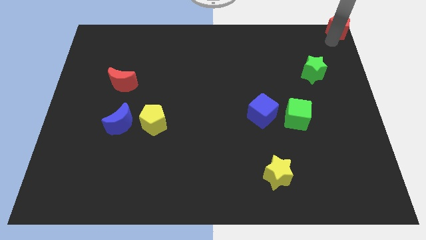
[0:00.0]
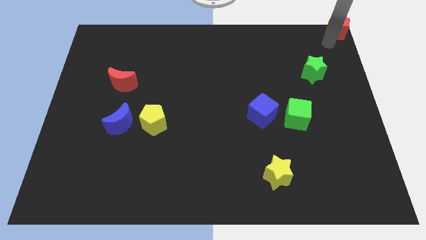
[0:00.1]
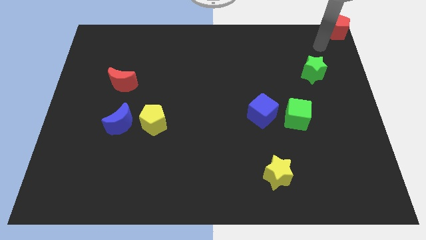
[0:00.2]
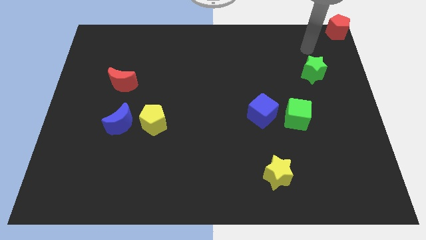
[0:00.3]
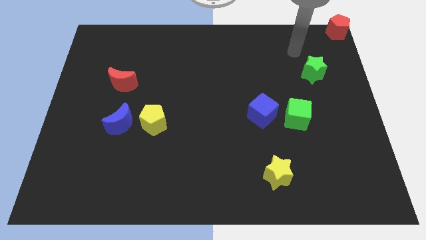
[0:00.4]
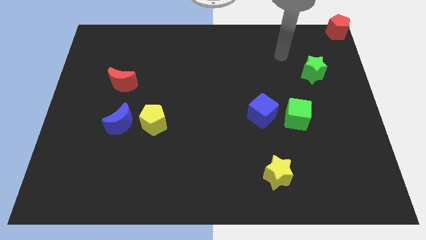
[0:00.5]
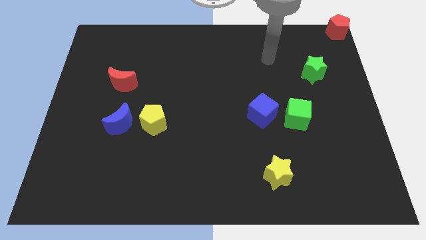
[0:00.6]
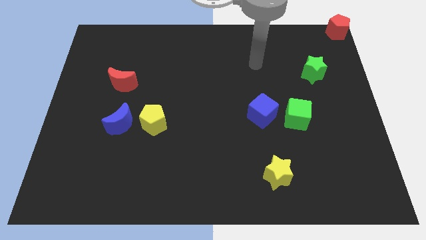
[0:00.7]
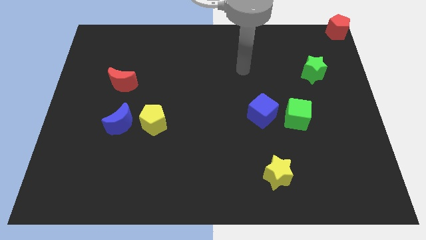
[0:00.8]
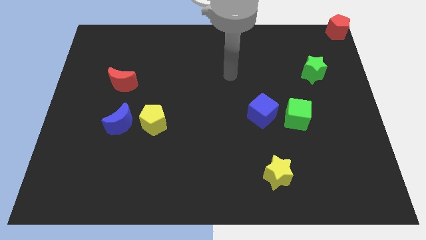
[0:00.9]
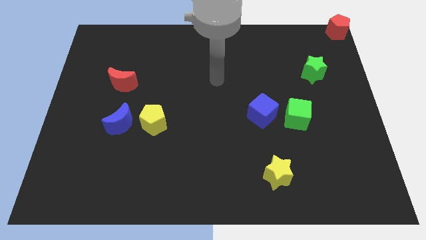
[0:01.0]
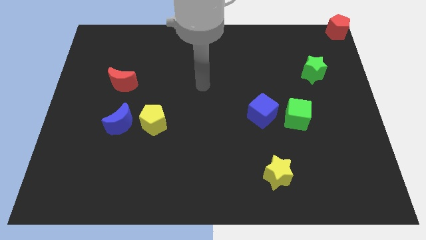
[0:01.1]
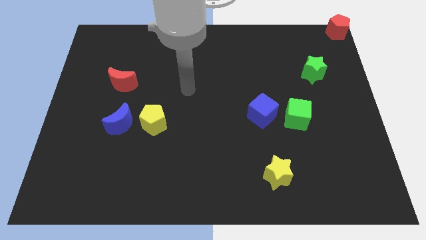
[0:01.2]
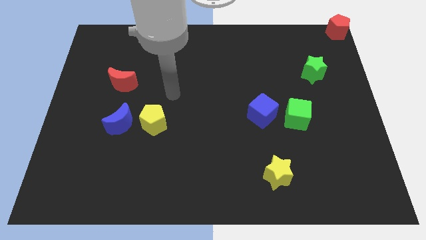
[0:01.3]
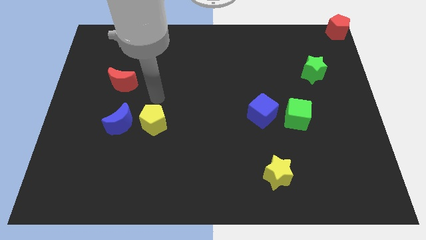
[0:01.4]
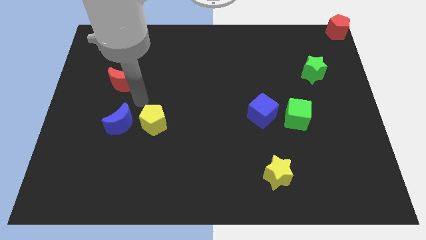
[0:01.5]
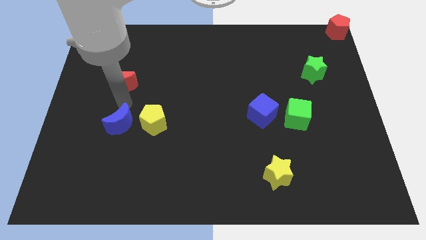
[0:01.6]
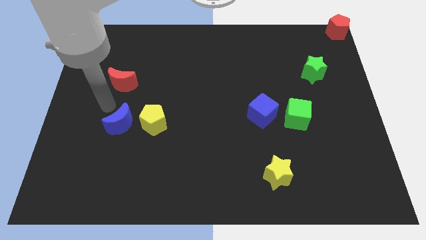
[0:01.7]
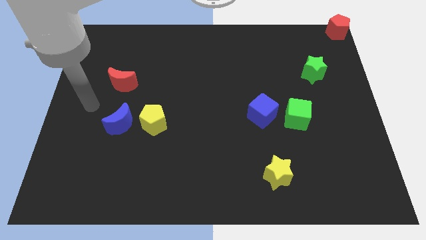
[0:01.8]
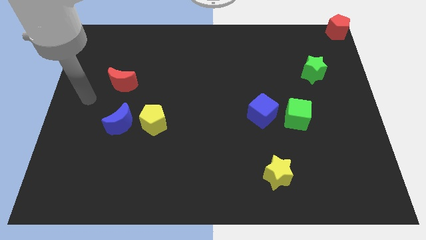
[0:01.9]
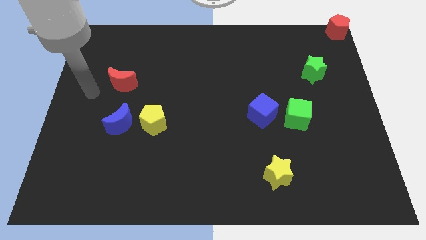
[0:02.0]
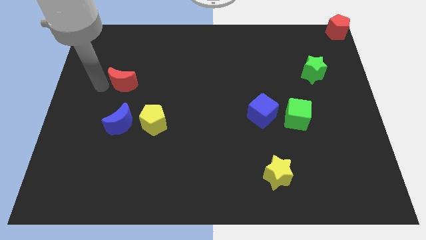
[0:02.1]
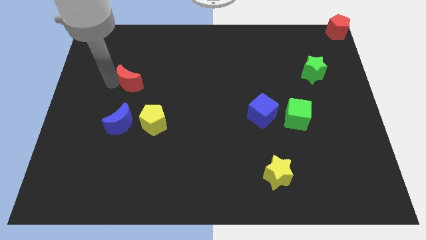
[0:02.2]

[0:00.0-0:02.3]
touch the bottom of red moon

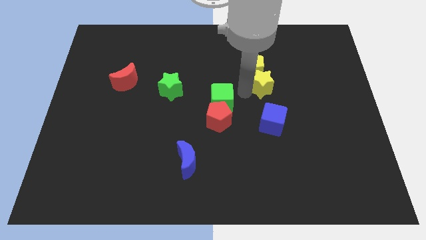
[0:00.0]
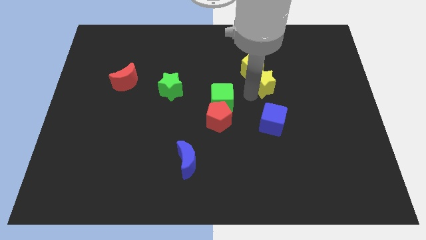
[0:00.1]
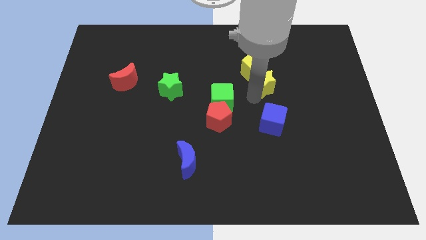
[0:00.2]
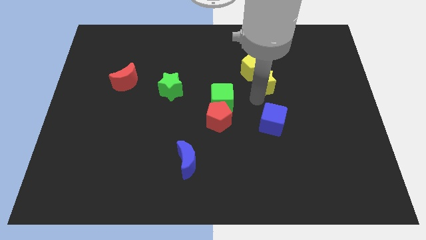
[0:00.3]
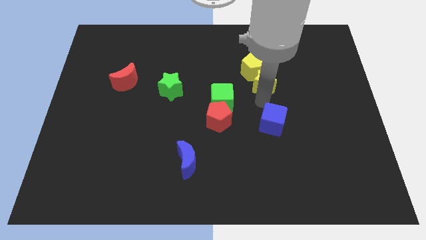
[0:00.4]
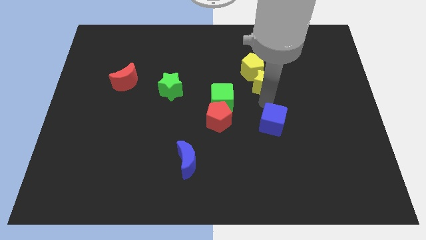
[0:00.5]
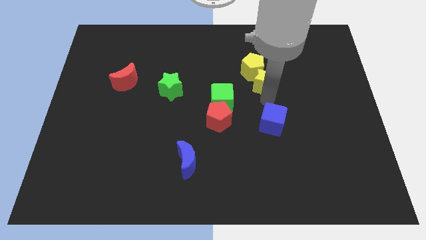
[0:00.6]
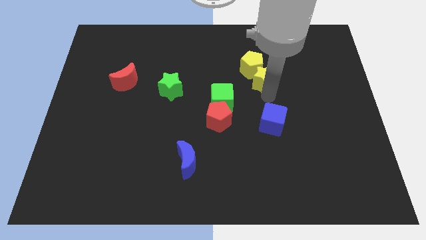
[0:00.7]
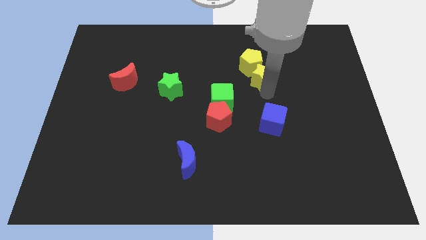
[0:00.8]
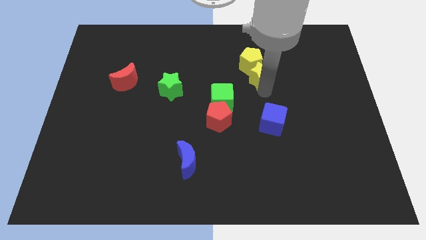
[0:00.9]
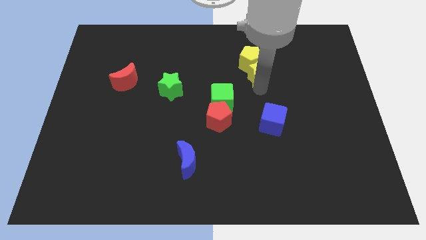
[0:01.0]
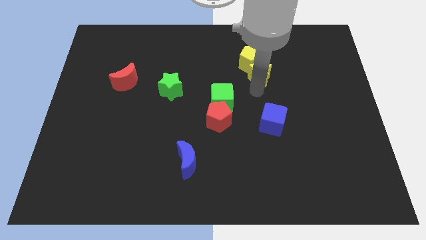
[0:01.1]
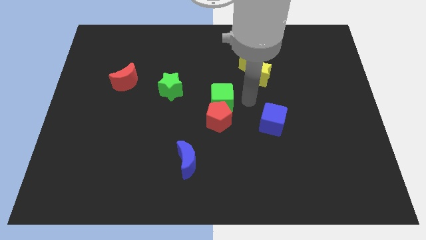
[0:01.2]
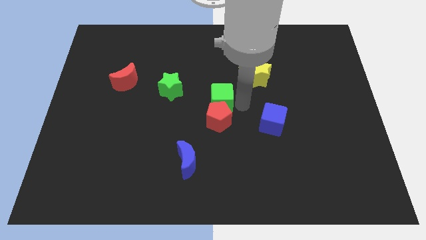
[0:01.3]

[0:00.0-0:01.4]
push the yellow blocks slightly up

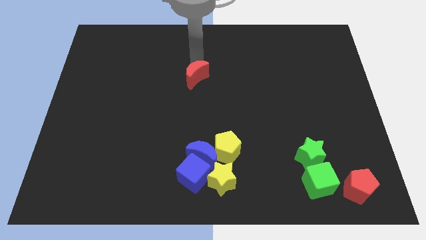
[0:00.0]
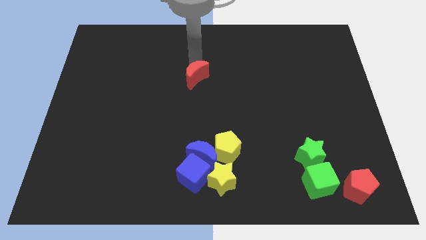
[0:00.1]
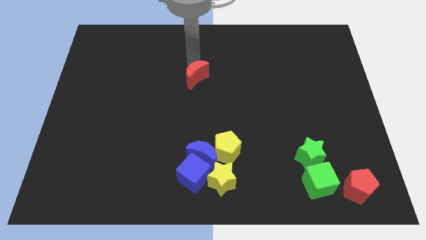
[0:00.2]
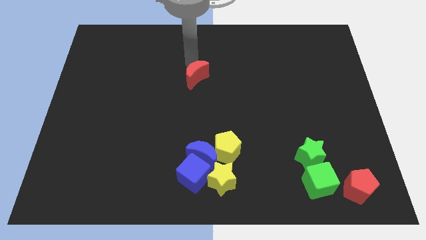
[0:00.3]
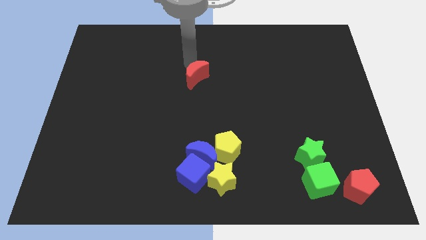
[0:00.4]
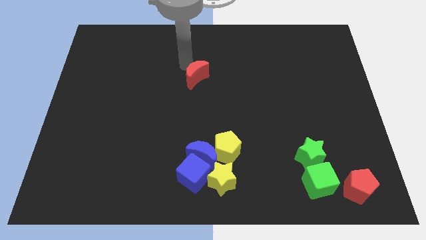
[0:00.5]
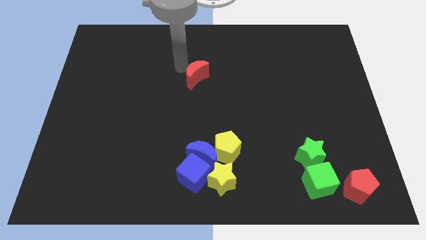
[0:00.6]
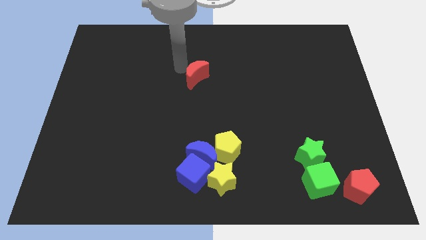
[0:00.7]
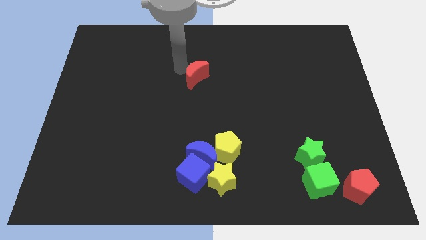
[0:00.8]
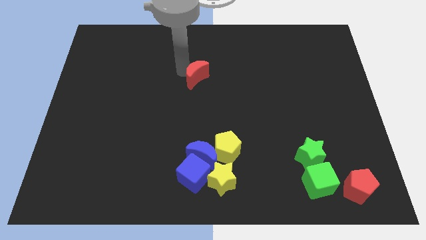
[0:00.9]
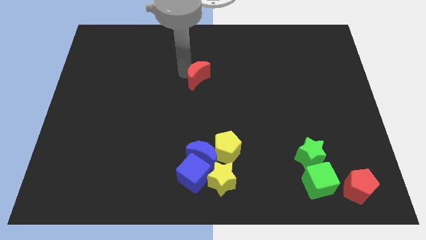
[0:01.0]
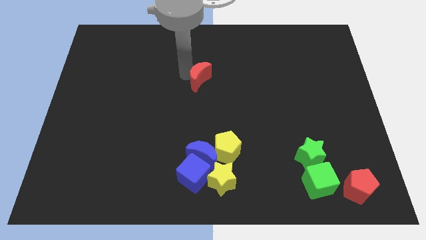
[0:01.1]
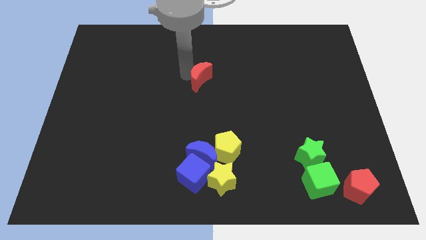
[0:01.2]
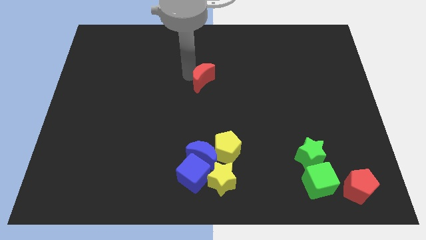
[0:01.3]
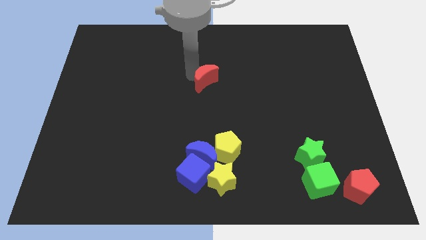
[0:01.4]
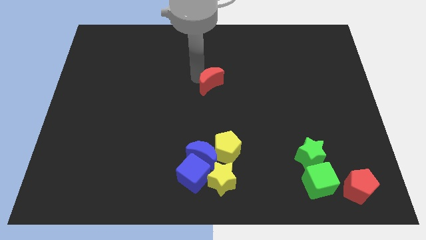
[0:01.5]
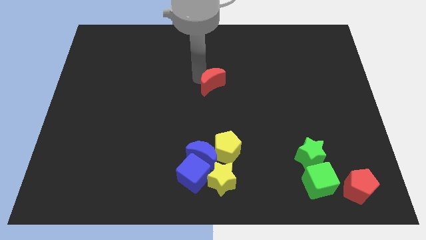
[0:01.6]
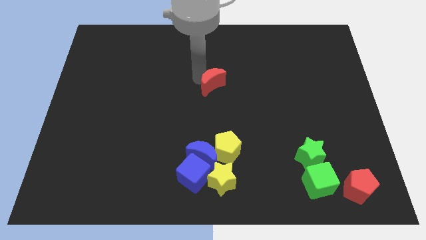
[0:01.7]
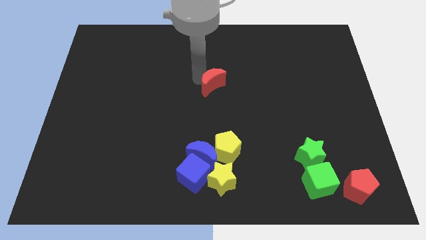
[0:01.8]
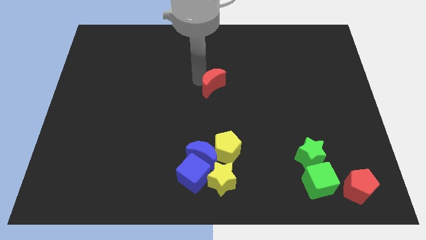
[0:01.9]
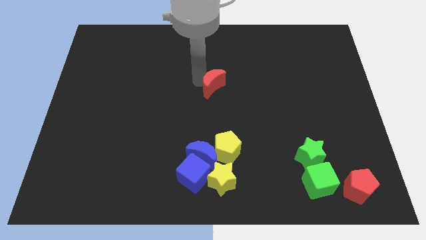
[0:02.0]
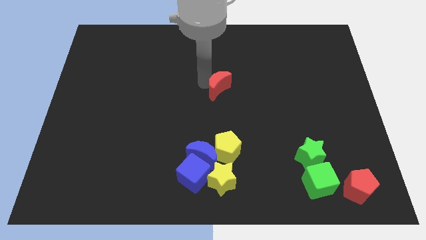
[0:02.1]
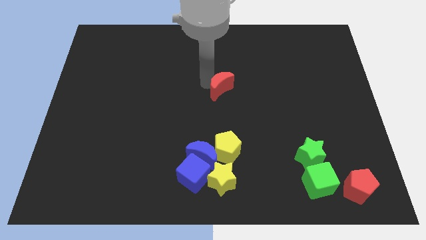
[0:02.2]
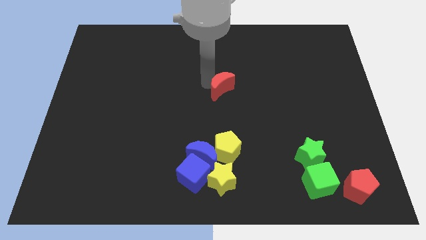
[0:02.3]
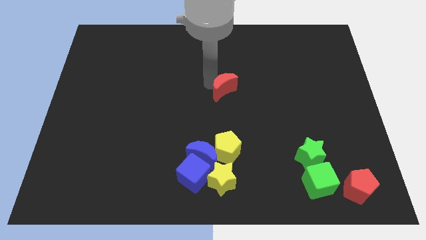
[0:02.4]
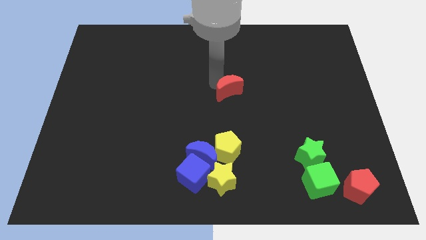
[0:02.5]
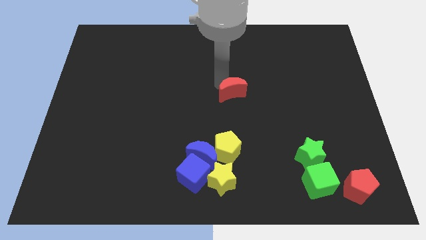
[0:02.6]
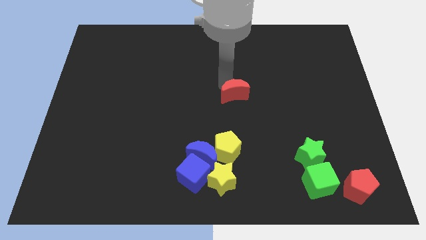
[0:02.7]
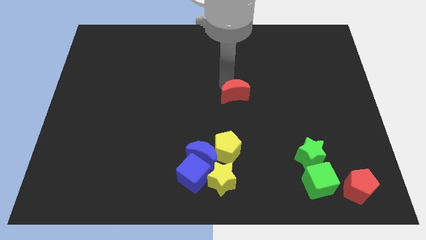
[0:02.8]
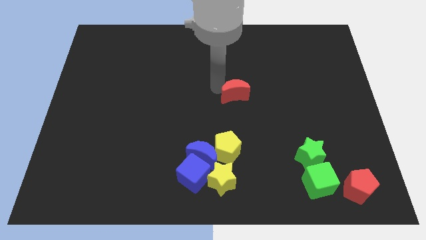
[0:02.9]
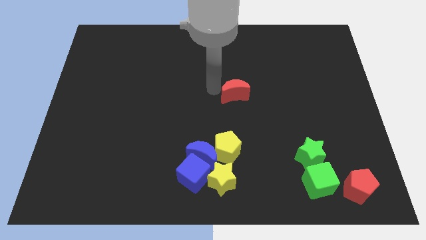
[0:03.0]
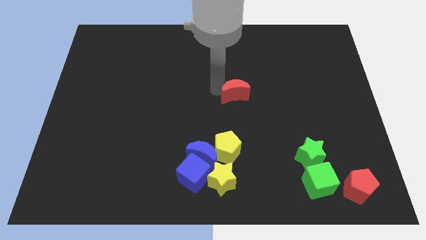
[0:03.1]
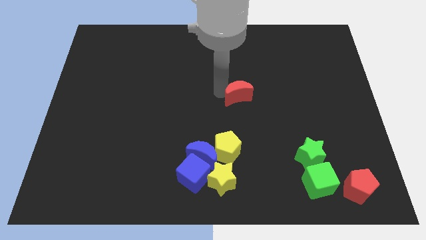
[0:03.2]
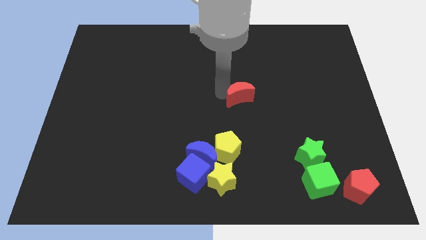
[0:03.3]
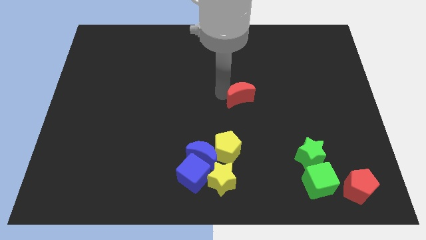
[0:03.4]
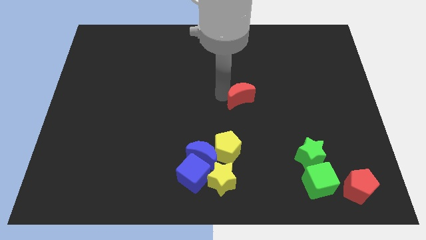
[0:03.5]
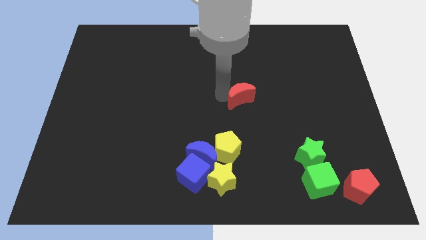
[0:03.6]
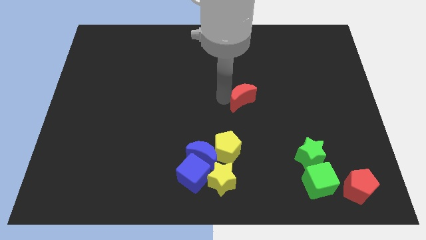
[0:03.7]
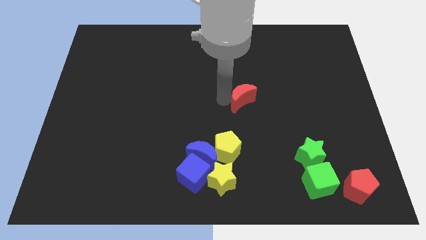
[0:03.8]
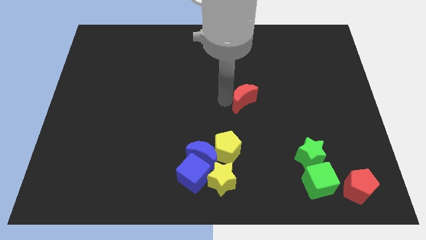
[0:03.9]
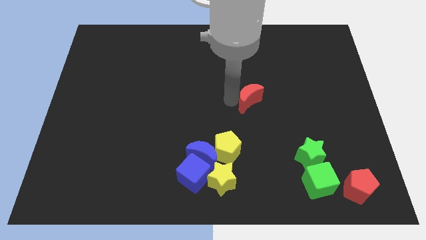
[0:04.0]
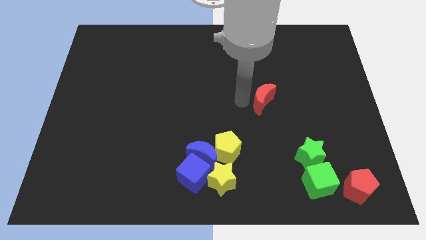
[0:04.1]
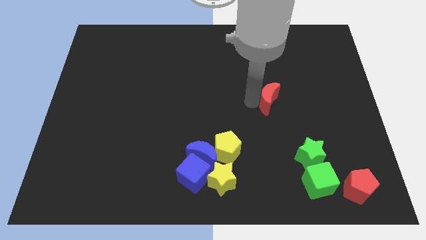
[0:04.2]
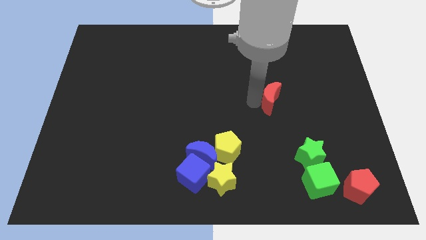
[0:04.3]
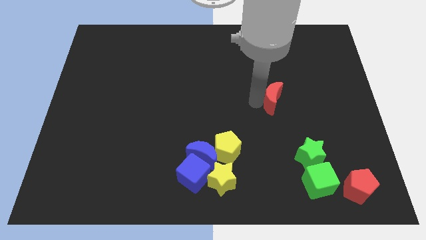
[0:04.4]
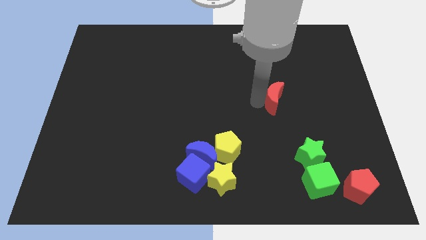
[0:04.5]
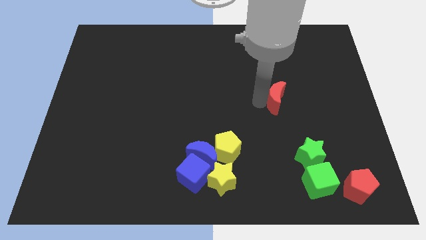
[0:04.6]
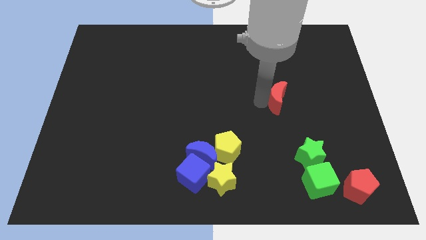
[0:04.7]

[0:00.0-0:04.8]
move the red crescent towards the bottom

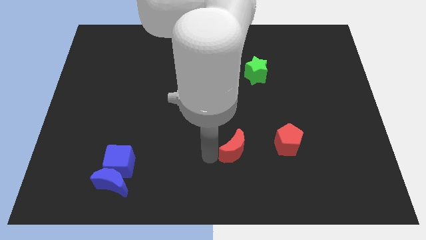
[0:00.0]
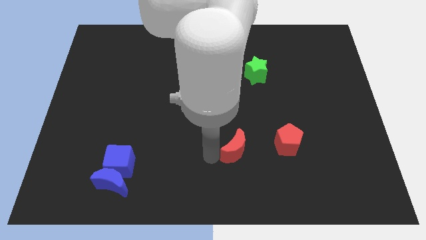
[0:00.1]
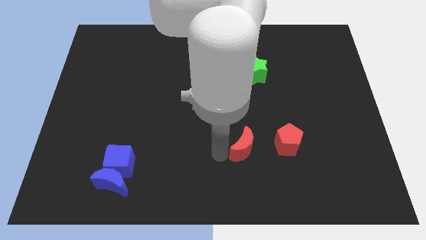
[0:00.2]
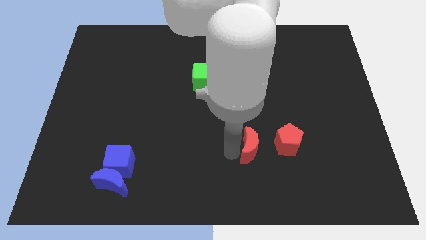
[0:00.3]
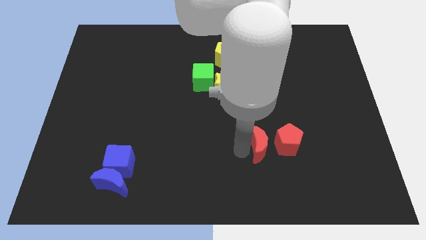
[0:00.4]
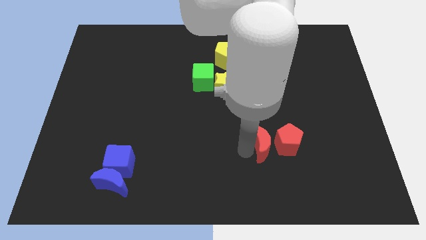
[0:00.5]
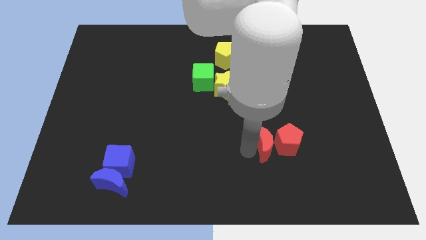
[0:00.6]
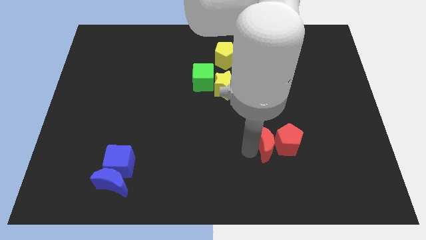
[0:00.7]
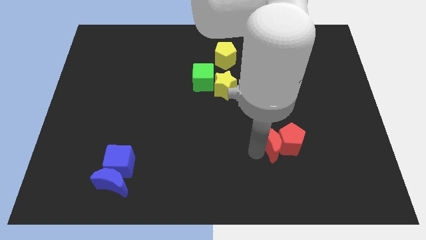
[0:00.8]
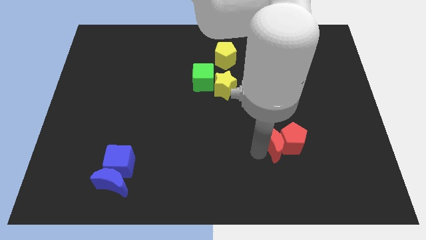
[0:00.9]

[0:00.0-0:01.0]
push the red crescent into red pentagon
